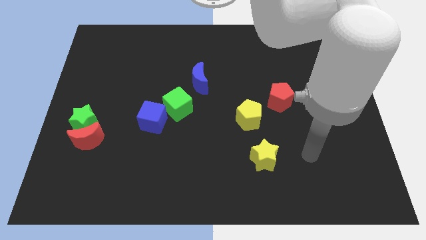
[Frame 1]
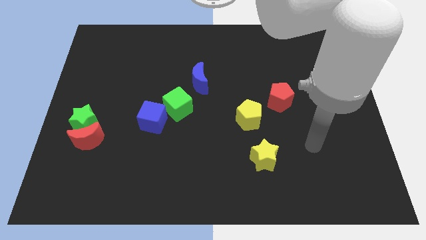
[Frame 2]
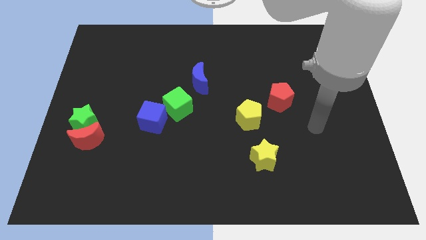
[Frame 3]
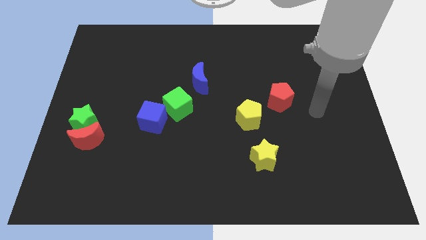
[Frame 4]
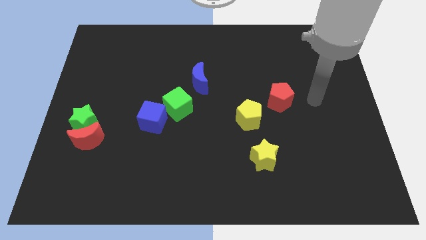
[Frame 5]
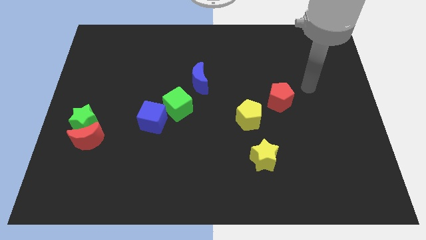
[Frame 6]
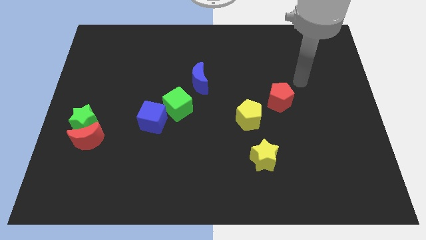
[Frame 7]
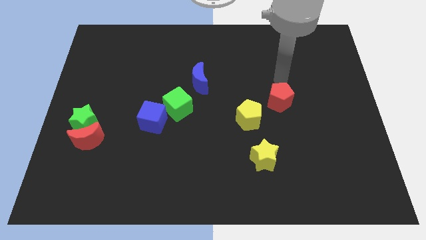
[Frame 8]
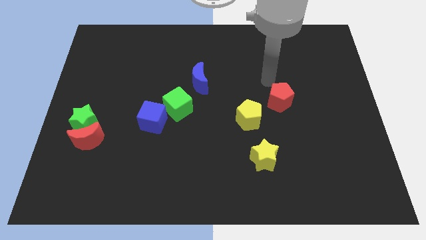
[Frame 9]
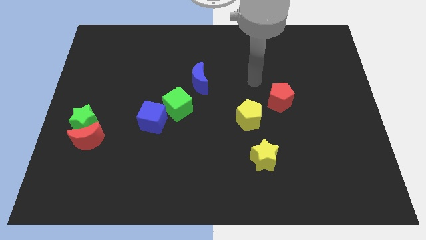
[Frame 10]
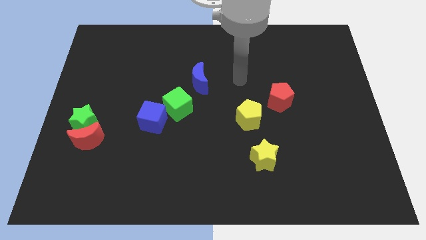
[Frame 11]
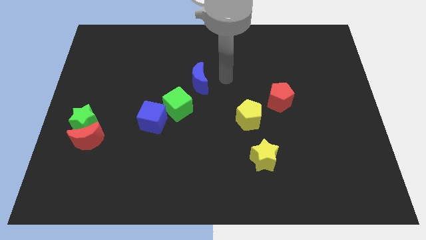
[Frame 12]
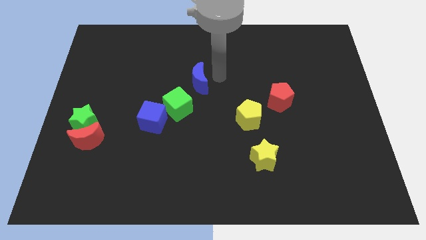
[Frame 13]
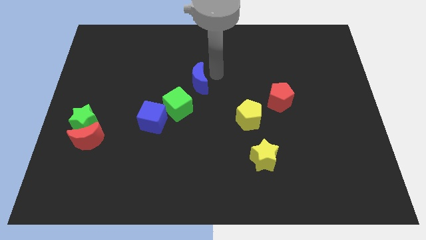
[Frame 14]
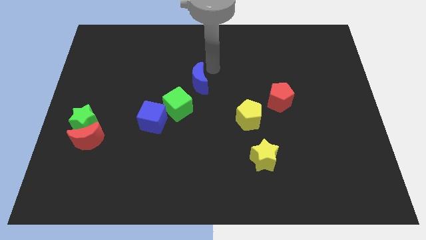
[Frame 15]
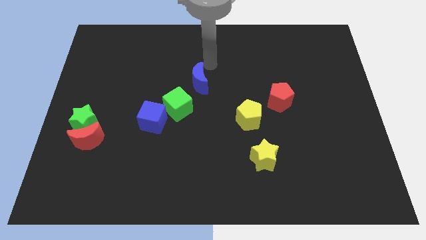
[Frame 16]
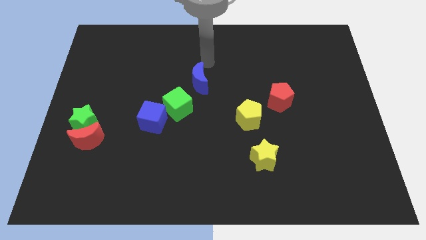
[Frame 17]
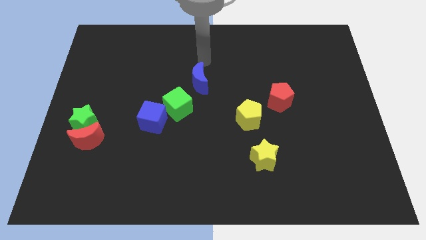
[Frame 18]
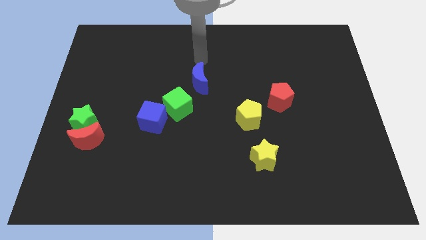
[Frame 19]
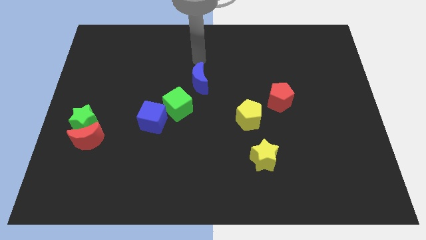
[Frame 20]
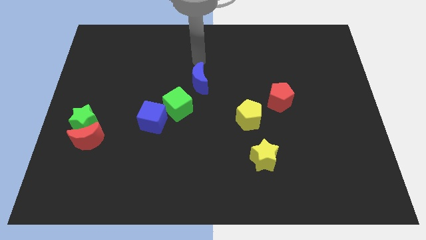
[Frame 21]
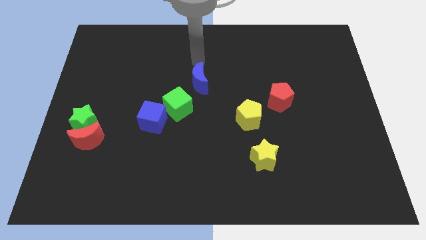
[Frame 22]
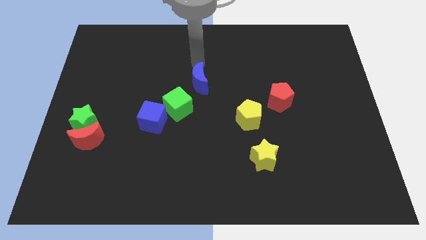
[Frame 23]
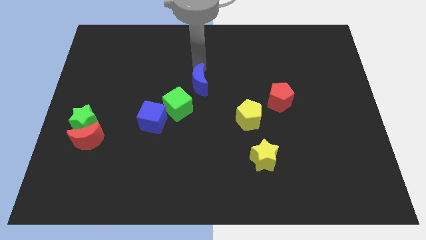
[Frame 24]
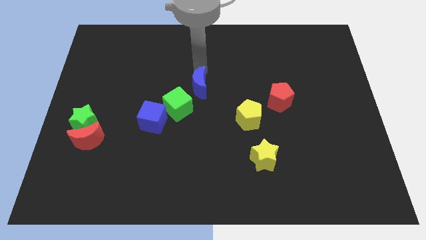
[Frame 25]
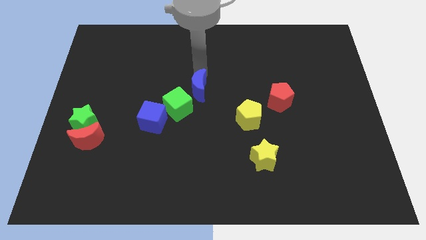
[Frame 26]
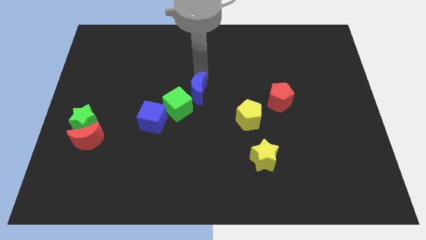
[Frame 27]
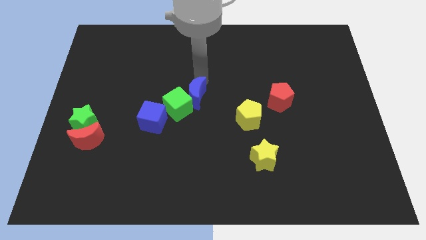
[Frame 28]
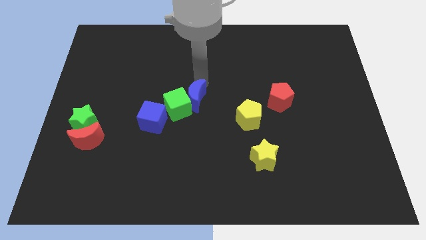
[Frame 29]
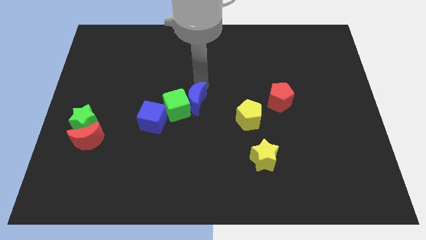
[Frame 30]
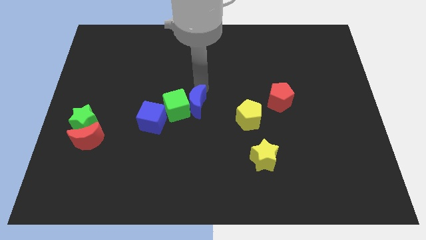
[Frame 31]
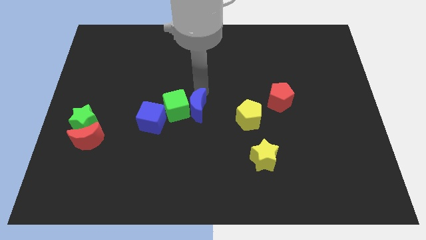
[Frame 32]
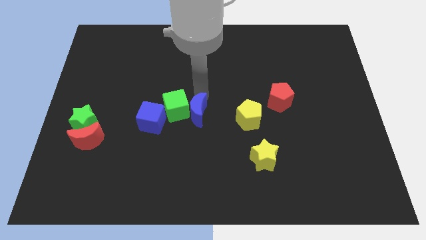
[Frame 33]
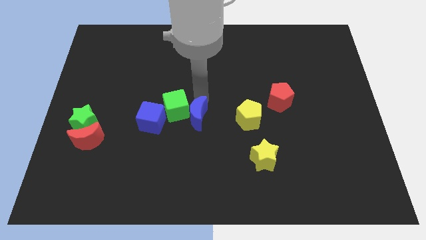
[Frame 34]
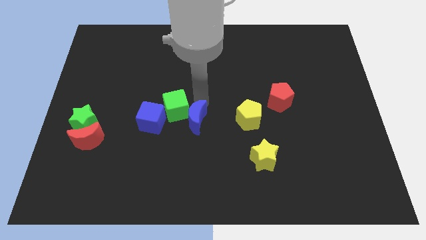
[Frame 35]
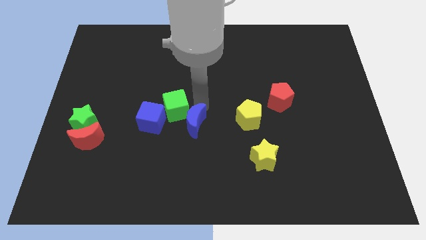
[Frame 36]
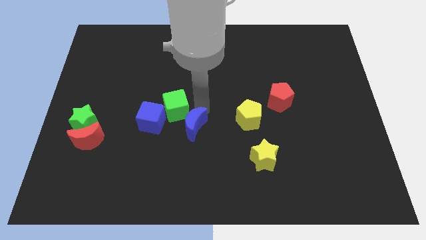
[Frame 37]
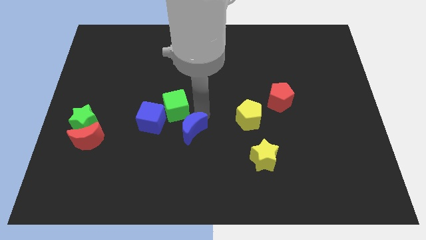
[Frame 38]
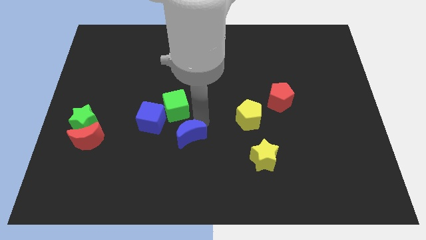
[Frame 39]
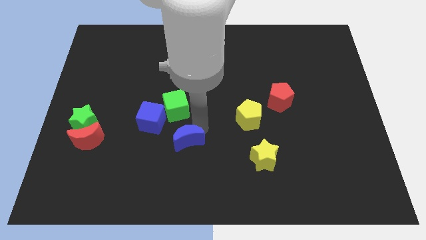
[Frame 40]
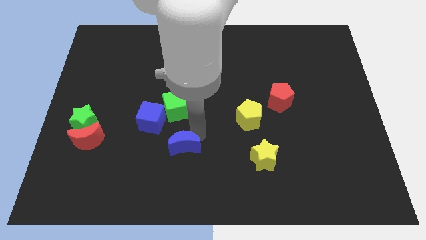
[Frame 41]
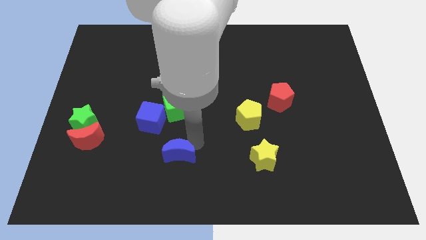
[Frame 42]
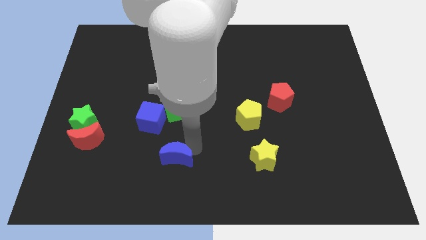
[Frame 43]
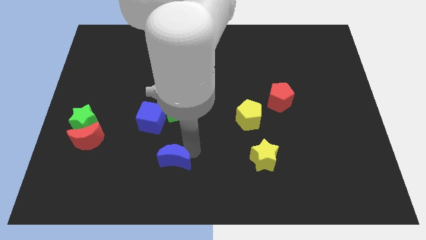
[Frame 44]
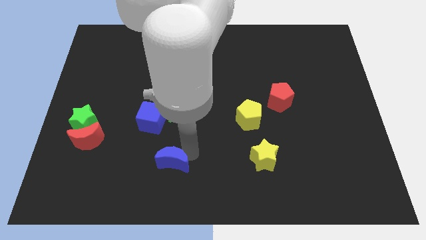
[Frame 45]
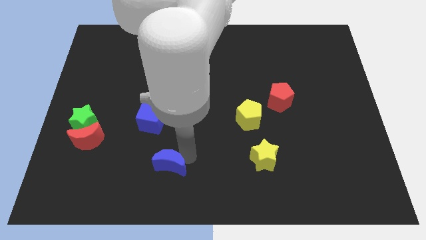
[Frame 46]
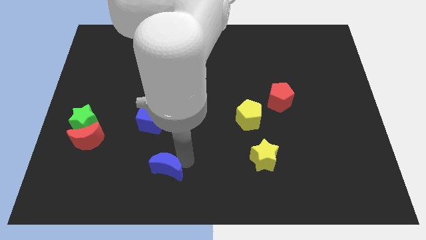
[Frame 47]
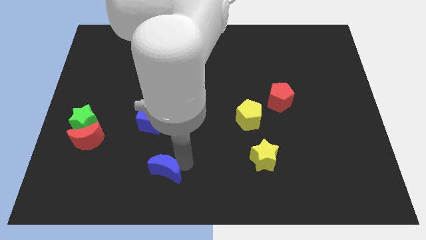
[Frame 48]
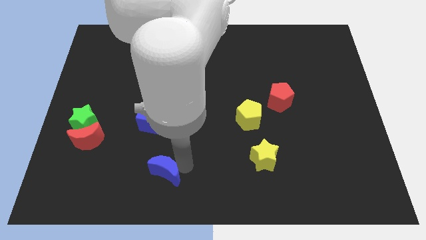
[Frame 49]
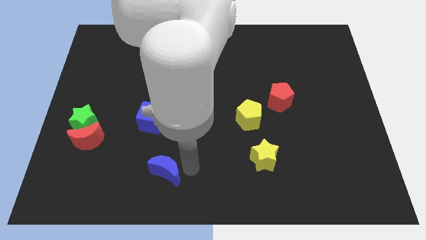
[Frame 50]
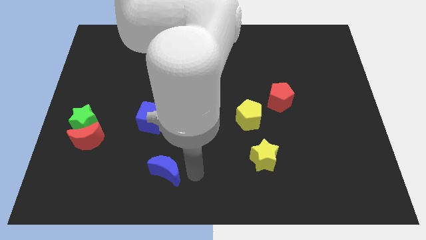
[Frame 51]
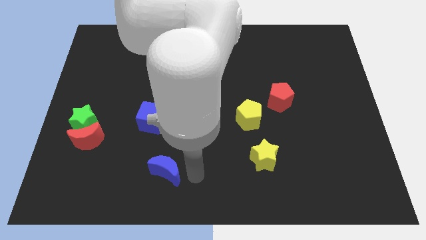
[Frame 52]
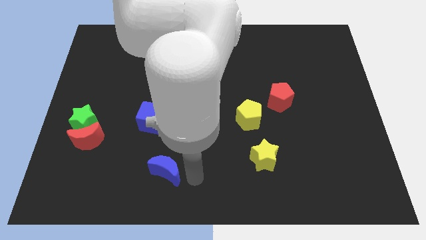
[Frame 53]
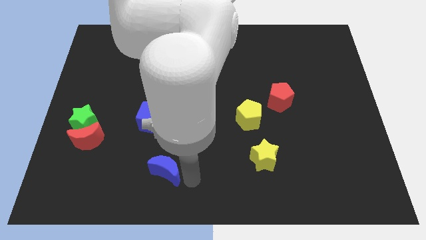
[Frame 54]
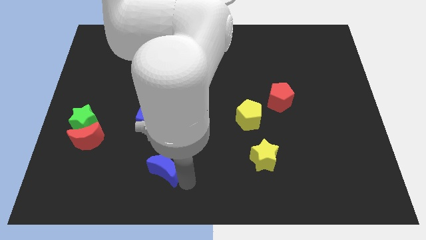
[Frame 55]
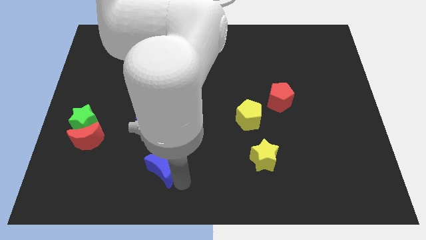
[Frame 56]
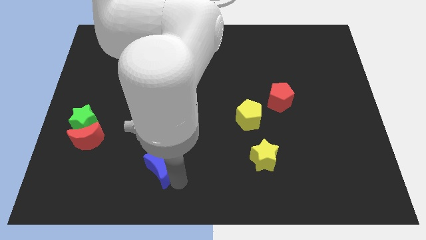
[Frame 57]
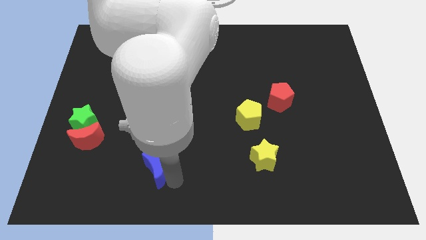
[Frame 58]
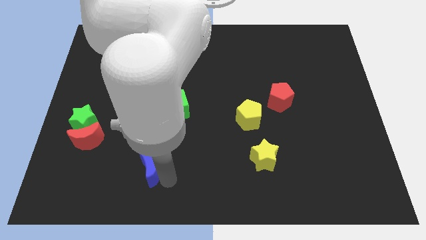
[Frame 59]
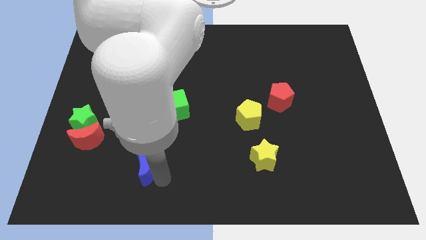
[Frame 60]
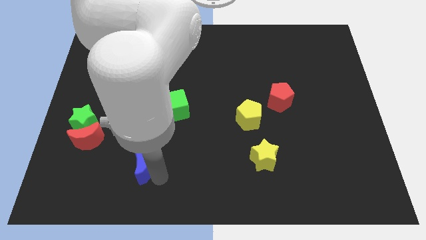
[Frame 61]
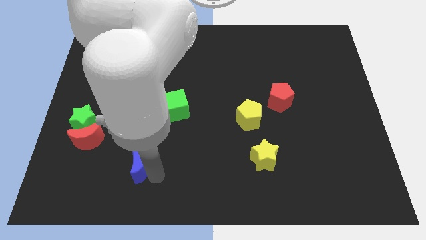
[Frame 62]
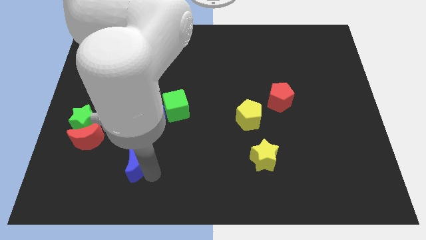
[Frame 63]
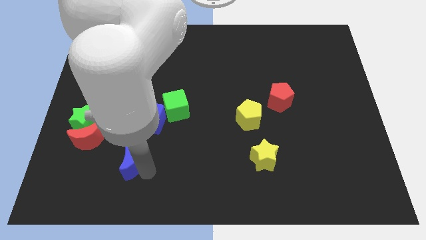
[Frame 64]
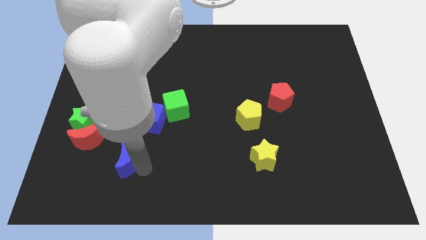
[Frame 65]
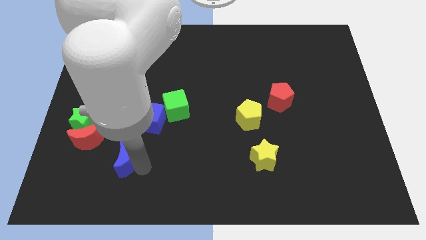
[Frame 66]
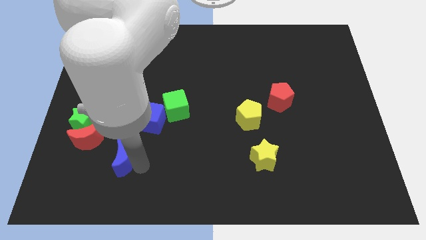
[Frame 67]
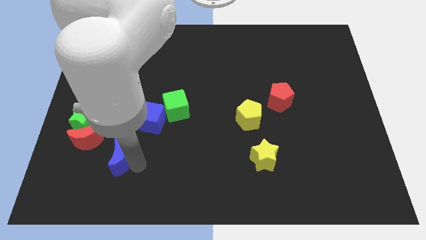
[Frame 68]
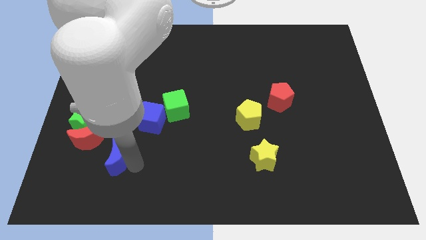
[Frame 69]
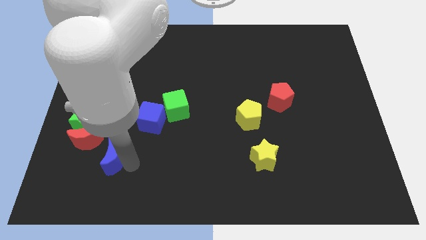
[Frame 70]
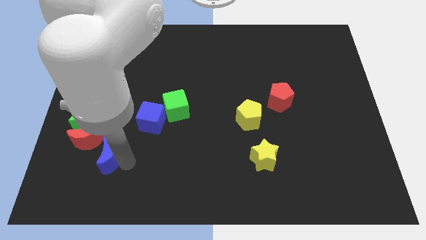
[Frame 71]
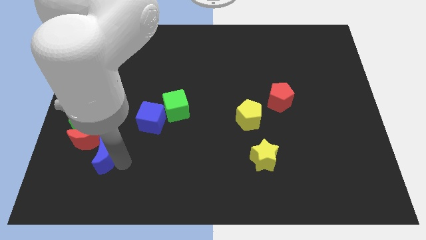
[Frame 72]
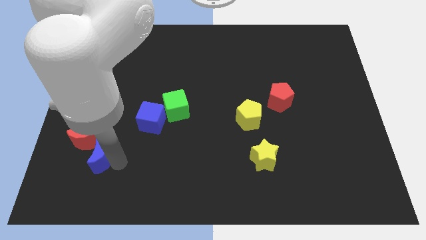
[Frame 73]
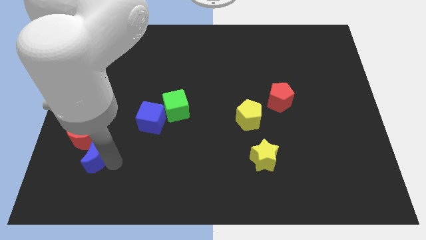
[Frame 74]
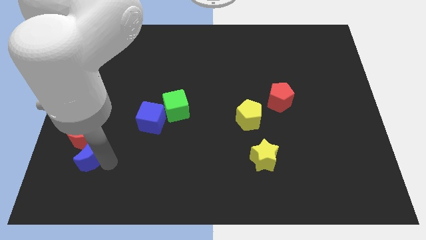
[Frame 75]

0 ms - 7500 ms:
slide the blue moon next to the red moon

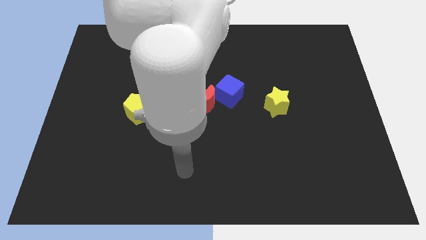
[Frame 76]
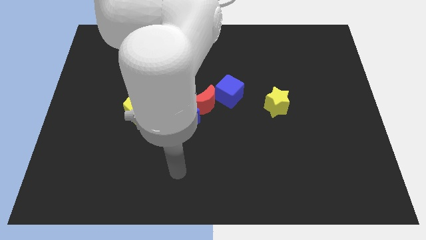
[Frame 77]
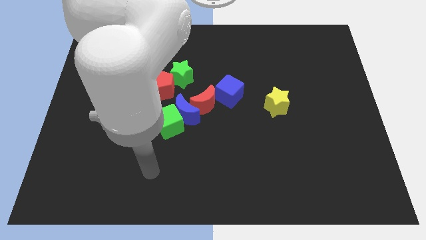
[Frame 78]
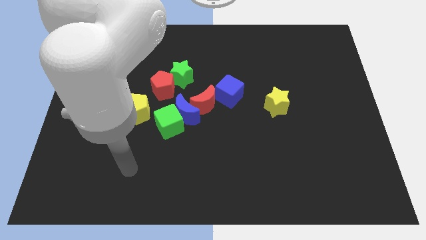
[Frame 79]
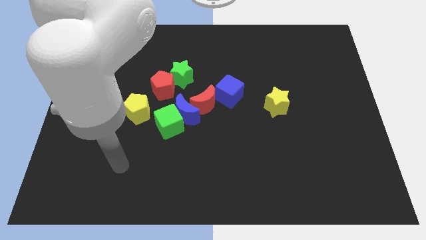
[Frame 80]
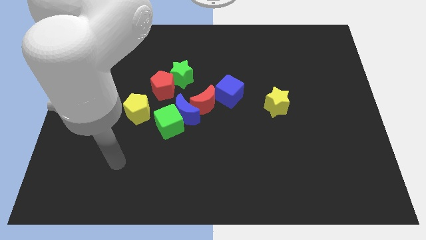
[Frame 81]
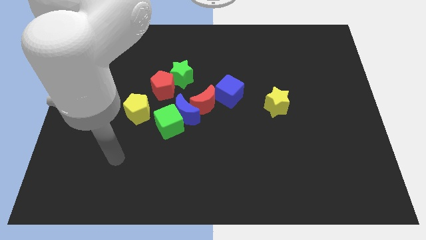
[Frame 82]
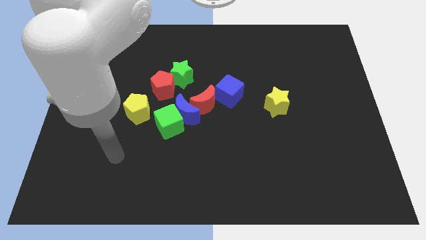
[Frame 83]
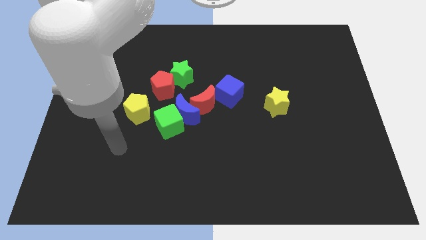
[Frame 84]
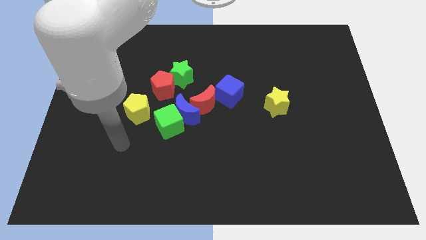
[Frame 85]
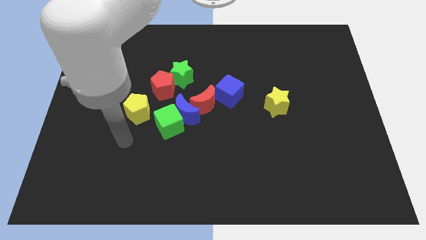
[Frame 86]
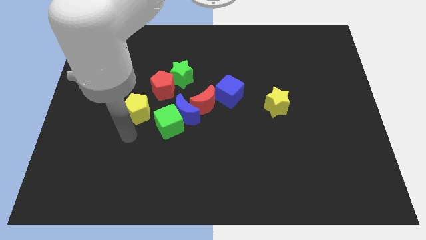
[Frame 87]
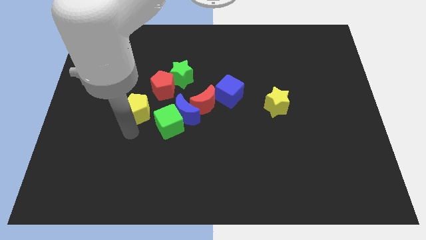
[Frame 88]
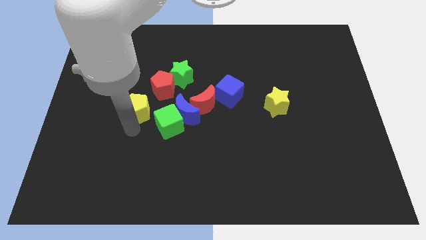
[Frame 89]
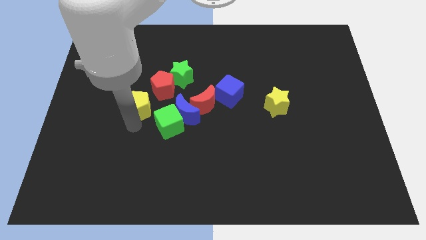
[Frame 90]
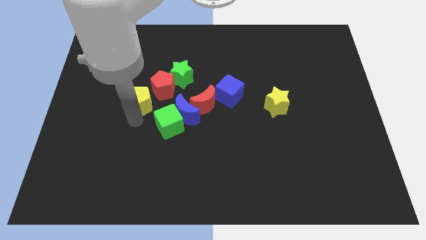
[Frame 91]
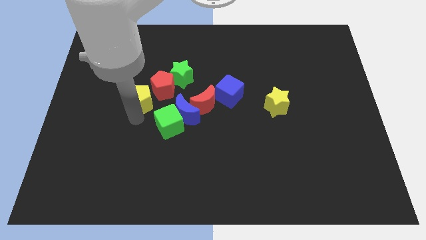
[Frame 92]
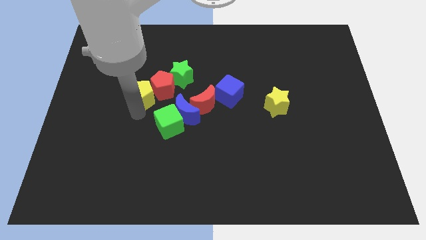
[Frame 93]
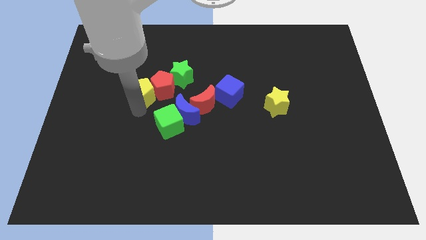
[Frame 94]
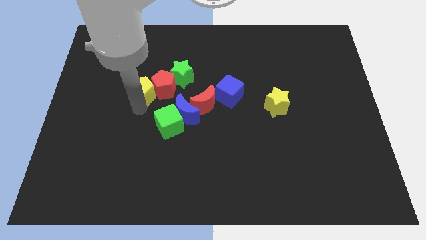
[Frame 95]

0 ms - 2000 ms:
move the yellow pentagon close to the red pentagon
